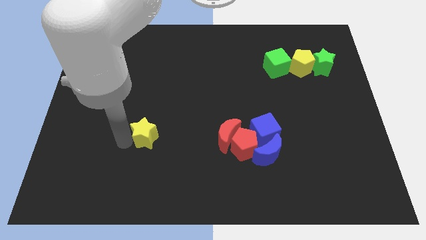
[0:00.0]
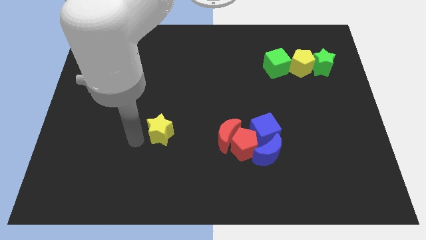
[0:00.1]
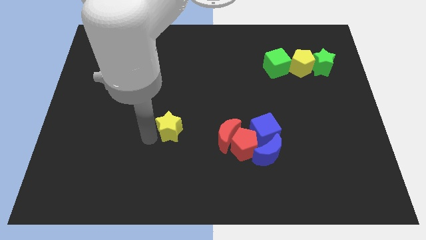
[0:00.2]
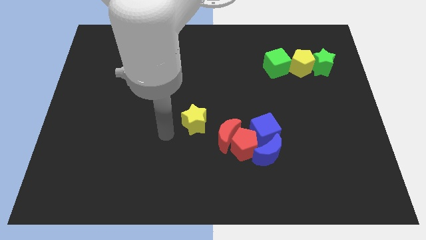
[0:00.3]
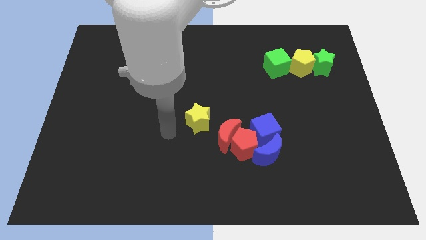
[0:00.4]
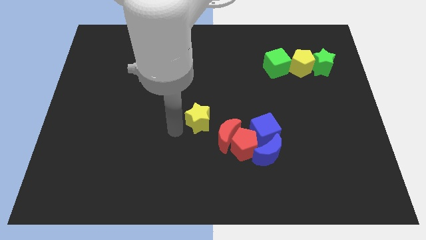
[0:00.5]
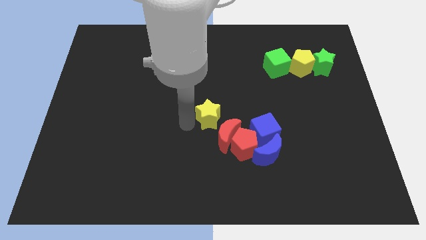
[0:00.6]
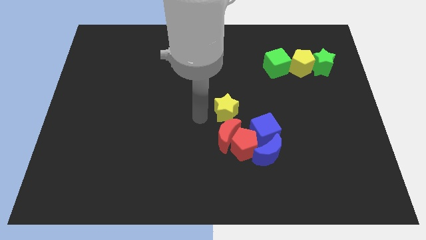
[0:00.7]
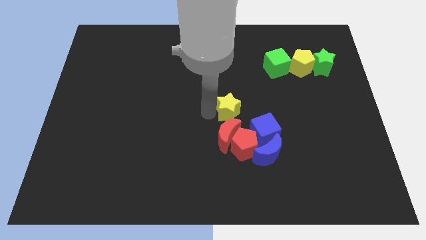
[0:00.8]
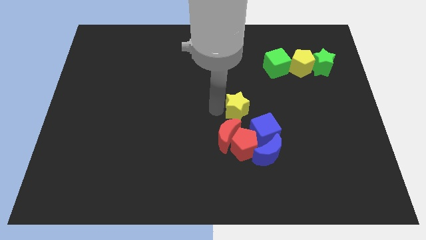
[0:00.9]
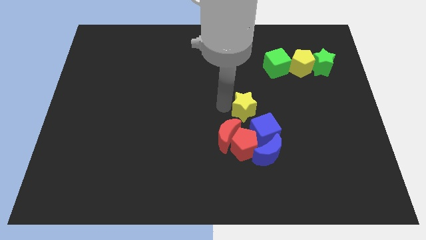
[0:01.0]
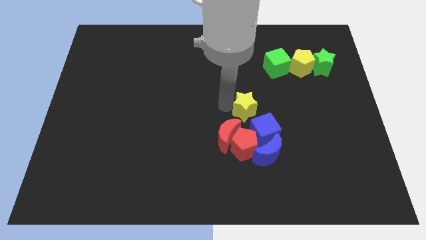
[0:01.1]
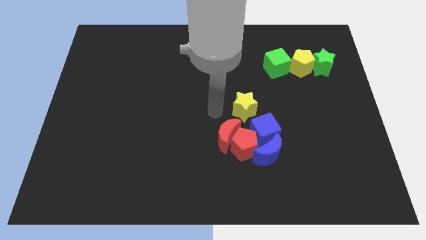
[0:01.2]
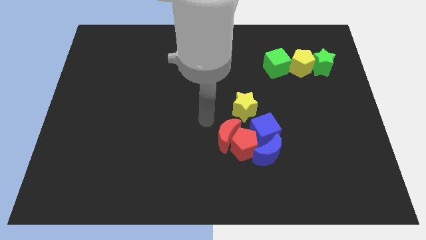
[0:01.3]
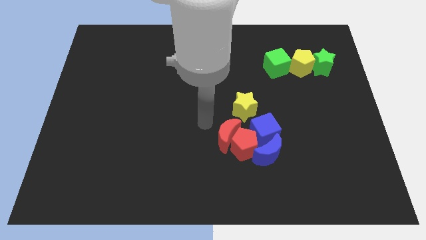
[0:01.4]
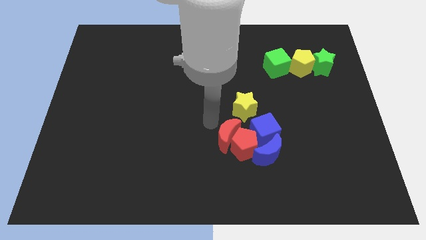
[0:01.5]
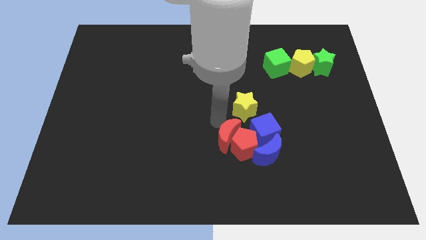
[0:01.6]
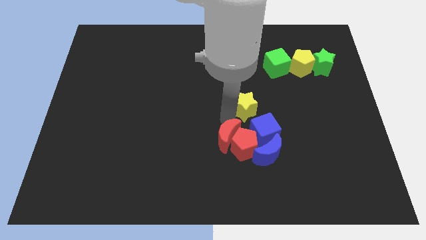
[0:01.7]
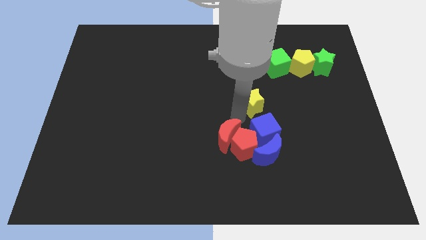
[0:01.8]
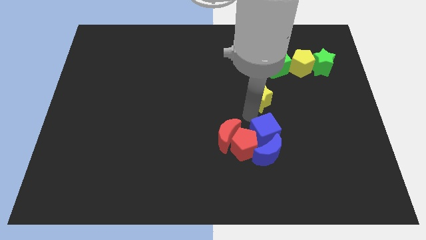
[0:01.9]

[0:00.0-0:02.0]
move the yellow star above the blue blocks

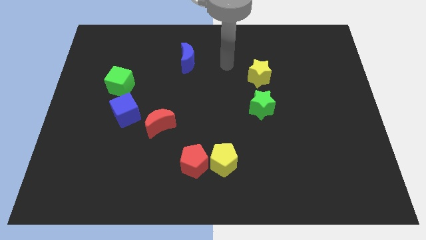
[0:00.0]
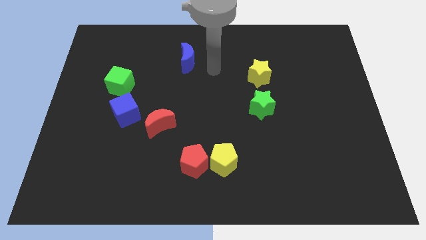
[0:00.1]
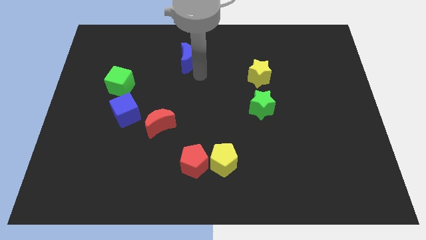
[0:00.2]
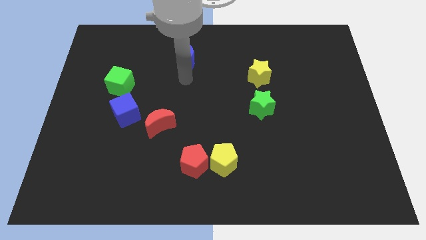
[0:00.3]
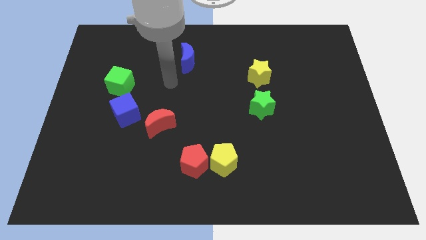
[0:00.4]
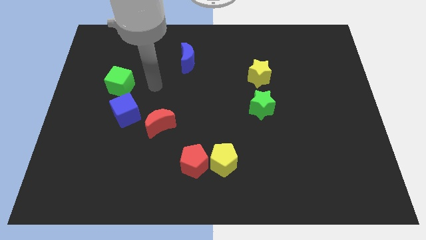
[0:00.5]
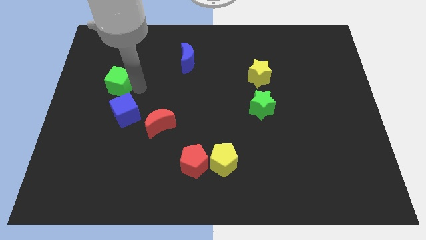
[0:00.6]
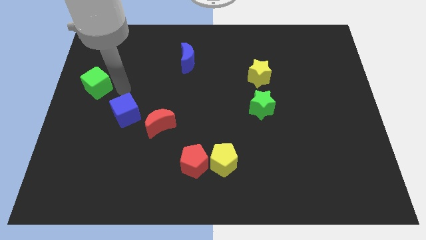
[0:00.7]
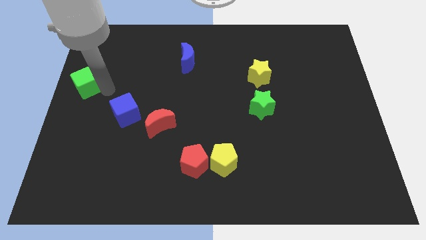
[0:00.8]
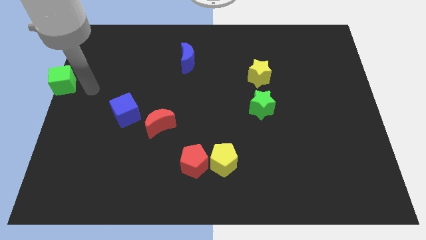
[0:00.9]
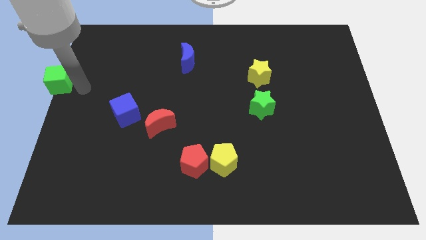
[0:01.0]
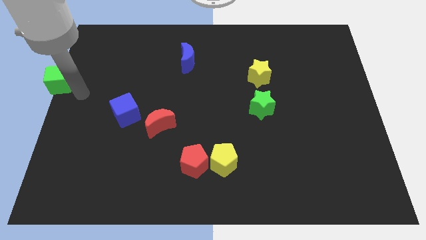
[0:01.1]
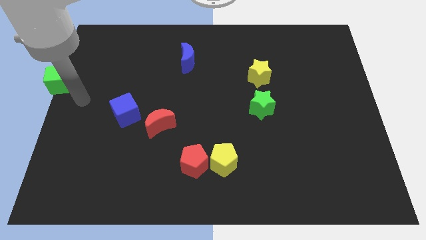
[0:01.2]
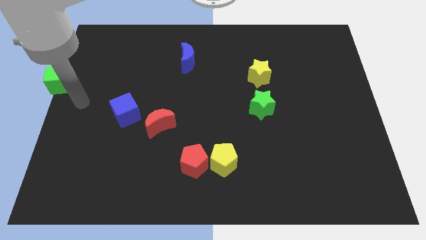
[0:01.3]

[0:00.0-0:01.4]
push the green cube to the middle left of the board

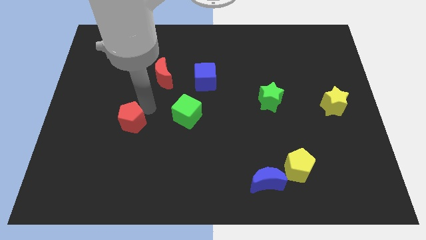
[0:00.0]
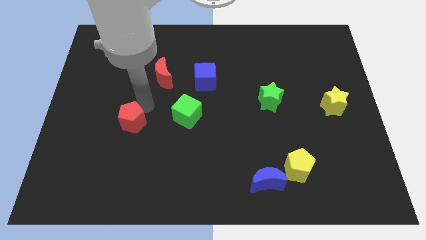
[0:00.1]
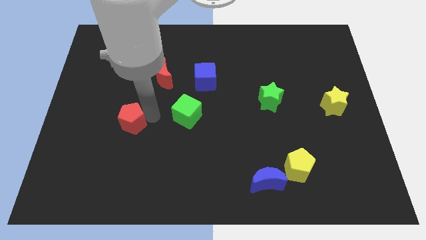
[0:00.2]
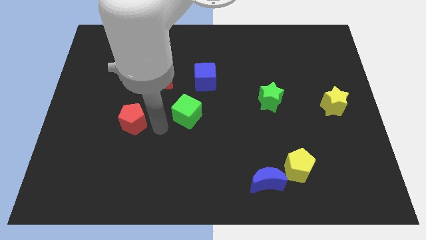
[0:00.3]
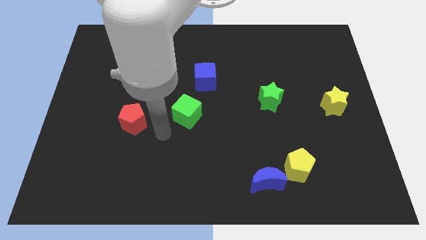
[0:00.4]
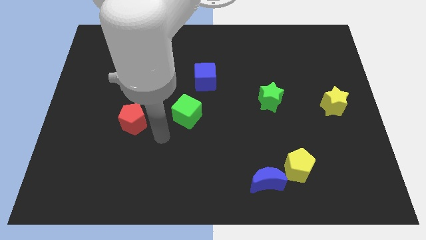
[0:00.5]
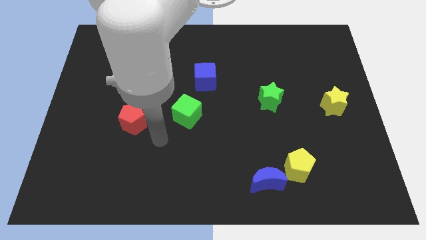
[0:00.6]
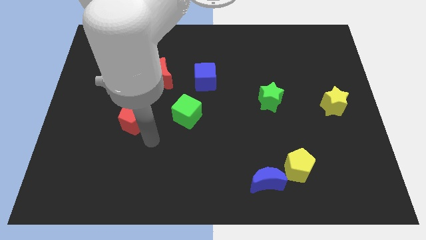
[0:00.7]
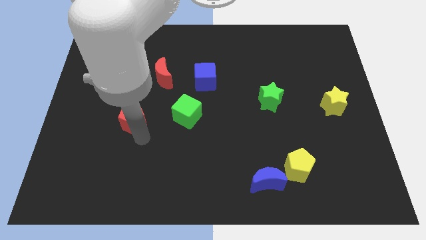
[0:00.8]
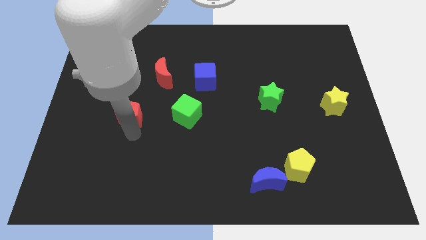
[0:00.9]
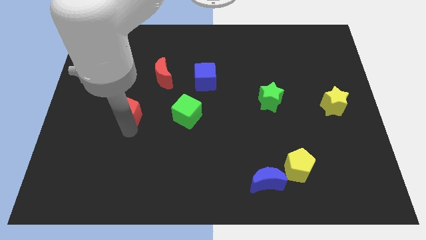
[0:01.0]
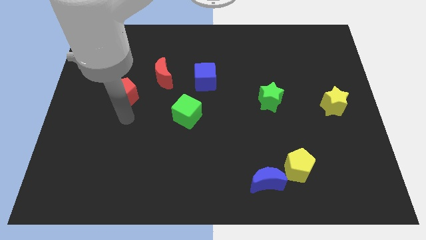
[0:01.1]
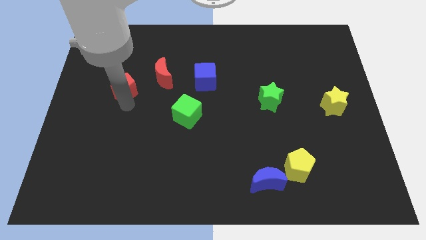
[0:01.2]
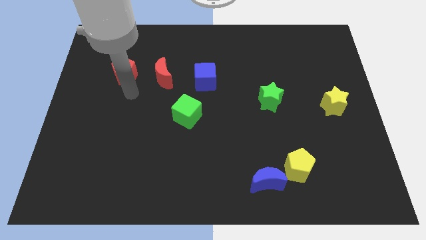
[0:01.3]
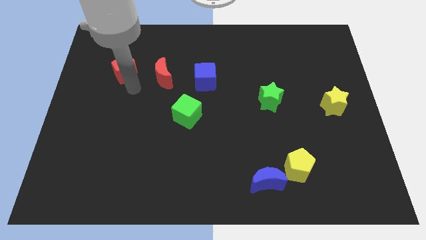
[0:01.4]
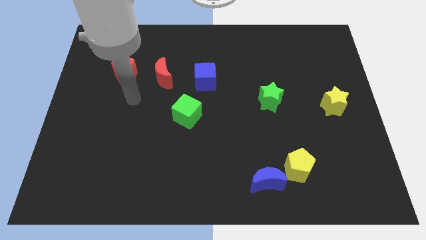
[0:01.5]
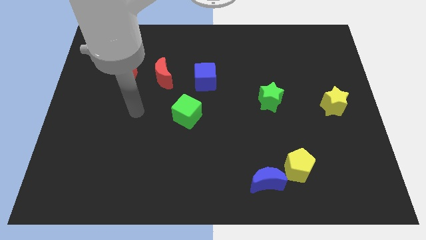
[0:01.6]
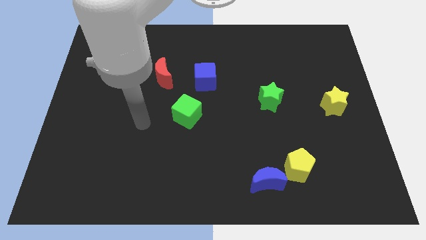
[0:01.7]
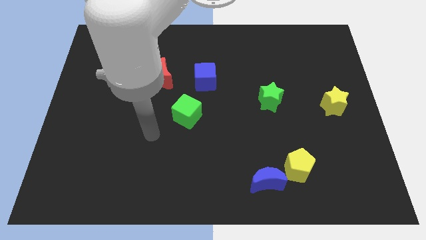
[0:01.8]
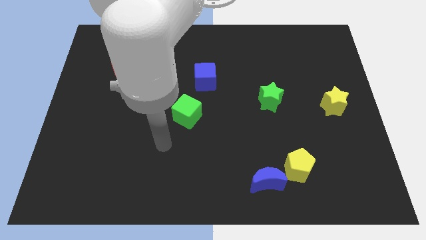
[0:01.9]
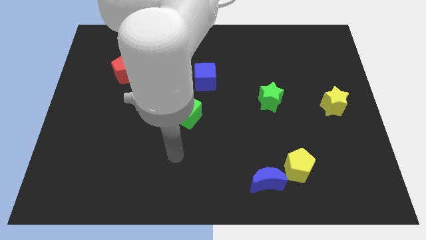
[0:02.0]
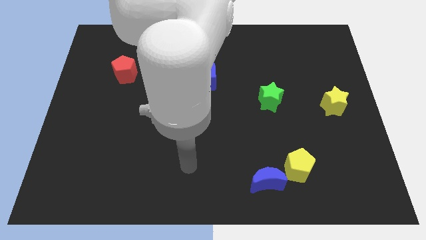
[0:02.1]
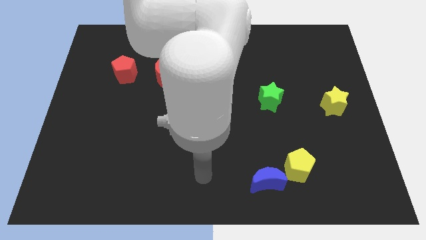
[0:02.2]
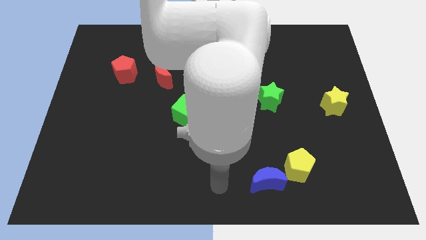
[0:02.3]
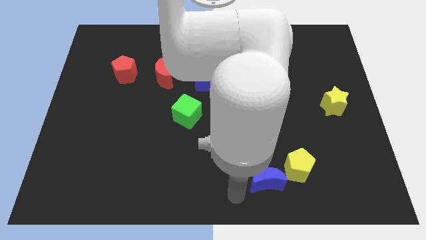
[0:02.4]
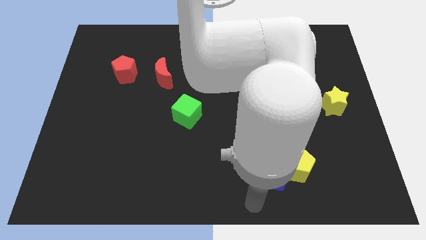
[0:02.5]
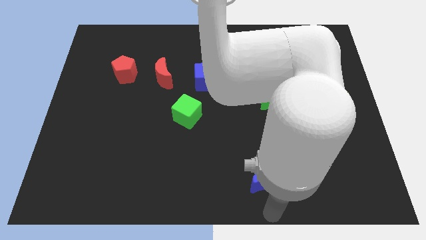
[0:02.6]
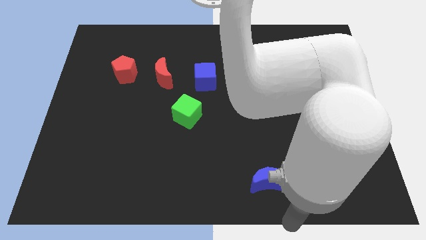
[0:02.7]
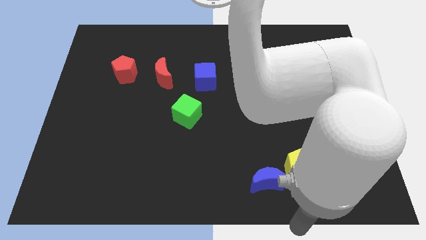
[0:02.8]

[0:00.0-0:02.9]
place the red pentagon to the left of the red moon

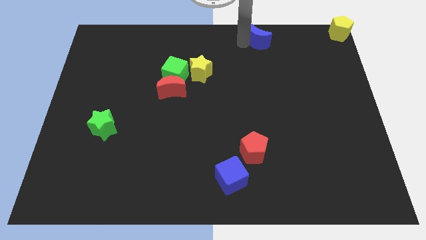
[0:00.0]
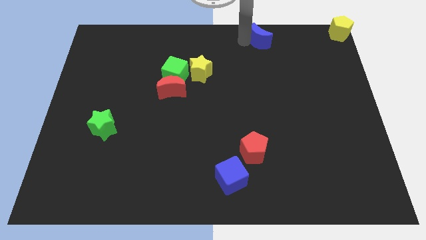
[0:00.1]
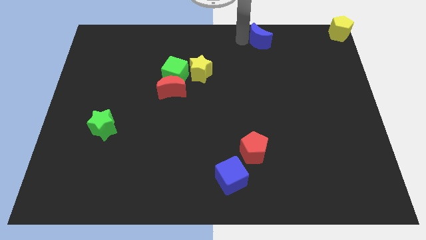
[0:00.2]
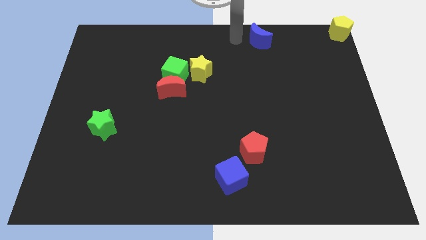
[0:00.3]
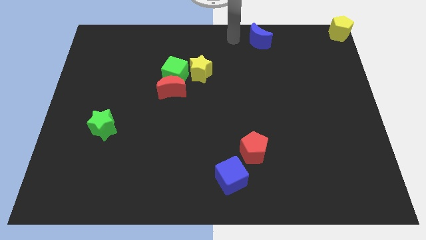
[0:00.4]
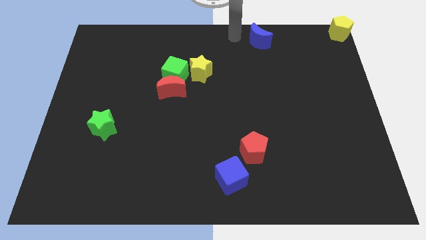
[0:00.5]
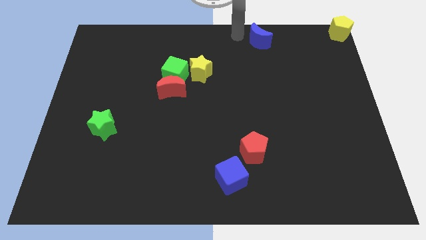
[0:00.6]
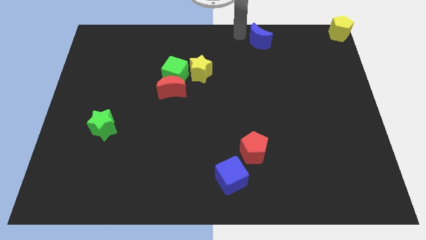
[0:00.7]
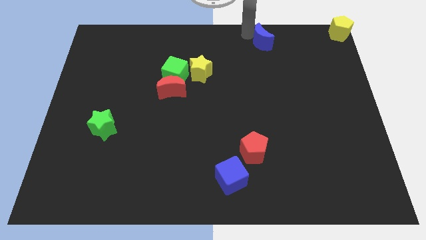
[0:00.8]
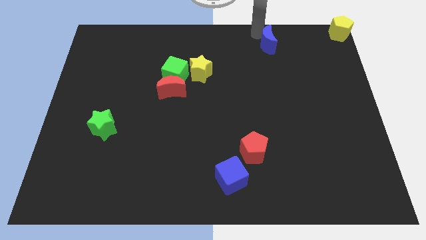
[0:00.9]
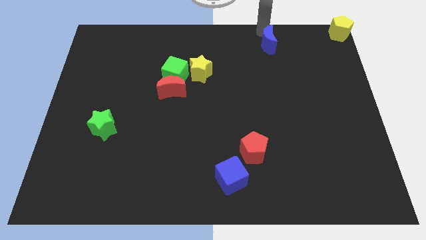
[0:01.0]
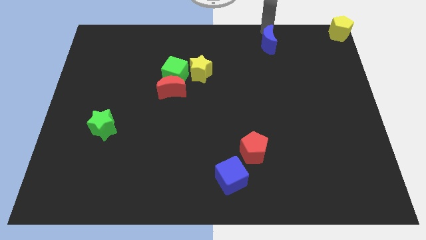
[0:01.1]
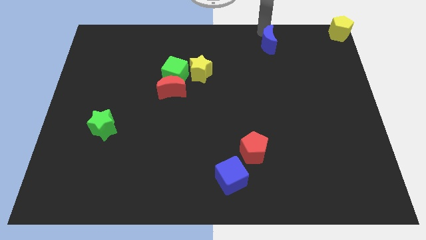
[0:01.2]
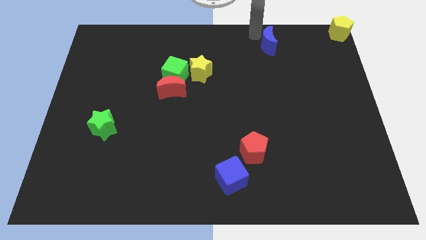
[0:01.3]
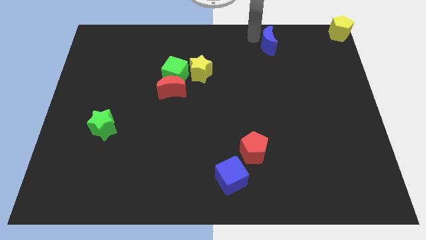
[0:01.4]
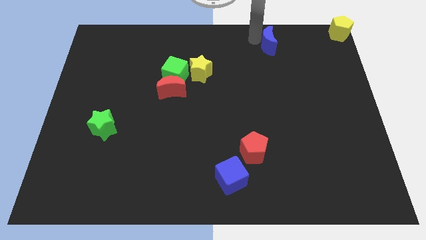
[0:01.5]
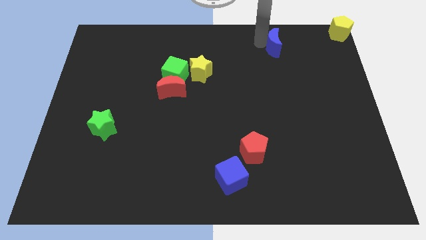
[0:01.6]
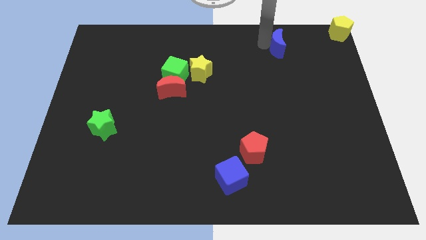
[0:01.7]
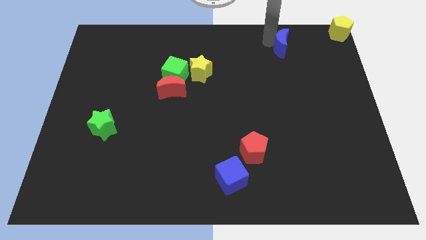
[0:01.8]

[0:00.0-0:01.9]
move blue crescent towards yellow pentagon

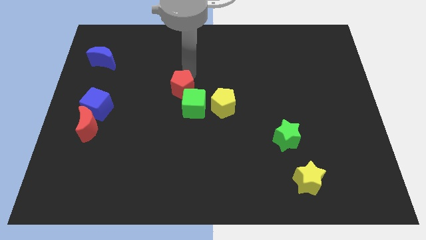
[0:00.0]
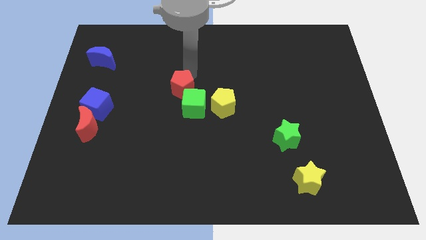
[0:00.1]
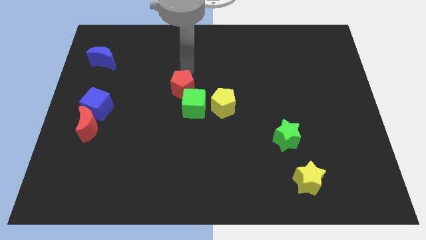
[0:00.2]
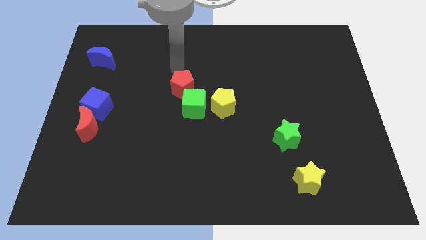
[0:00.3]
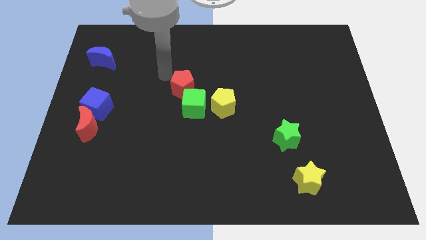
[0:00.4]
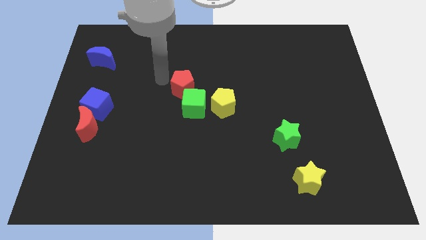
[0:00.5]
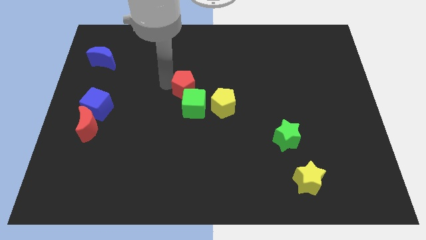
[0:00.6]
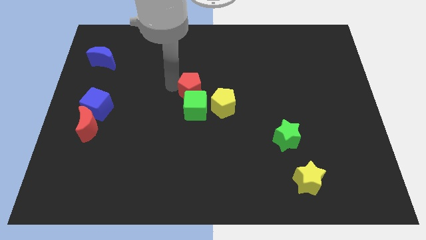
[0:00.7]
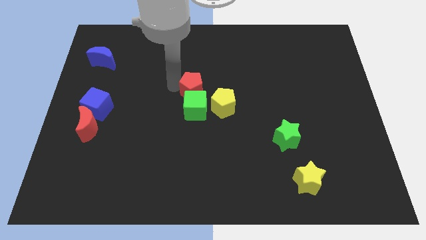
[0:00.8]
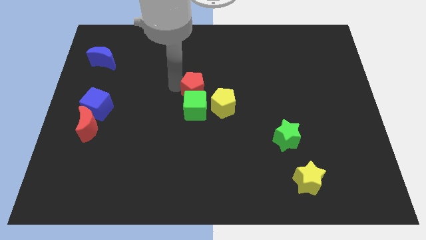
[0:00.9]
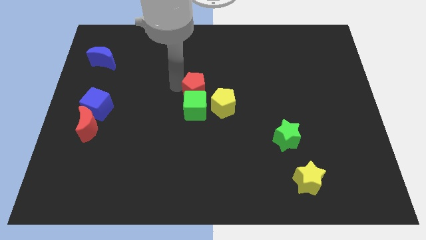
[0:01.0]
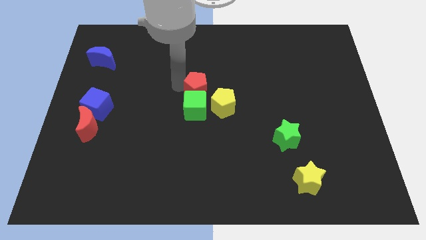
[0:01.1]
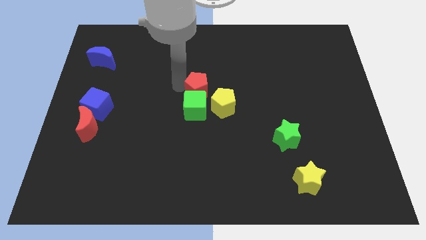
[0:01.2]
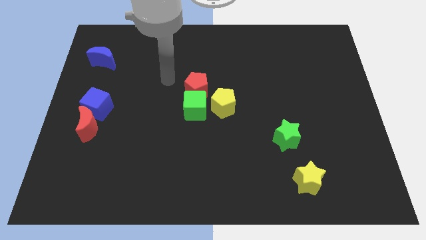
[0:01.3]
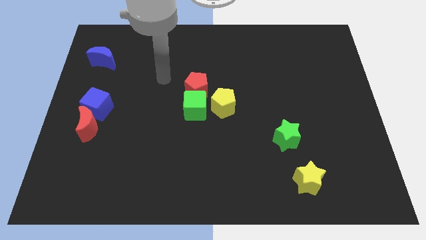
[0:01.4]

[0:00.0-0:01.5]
move the red pentagon above the green cube
